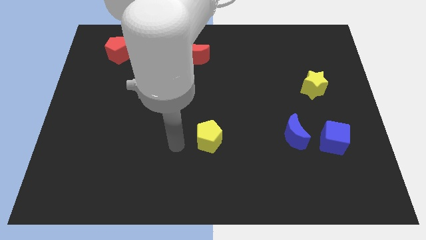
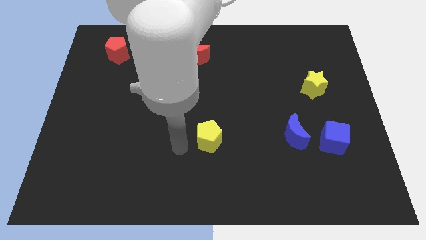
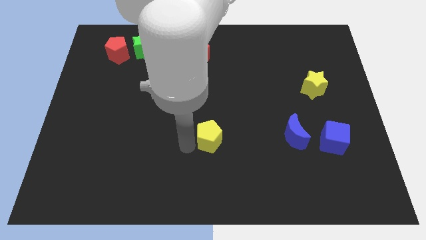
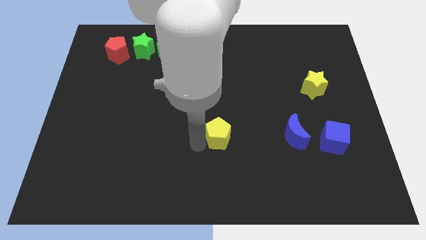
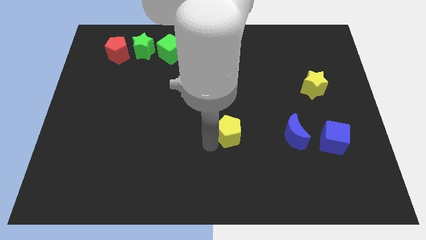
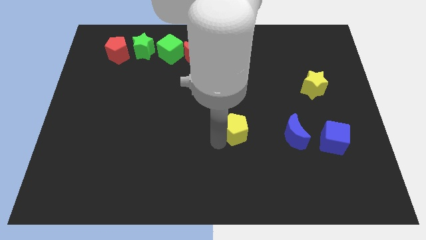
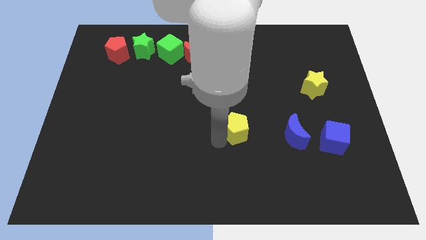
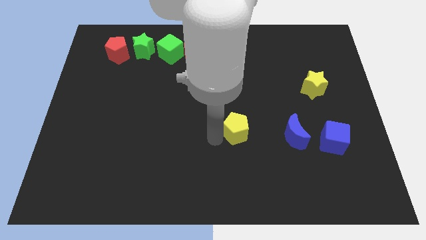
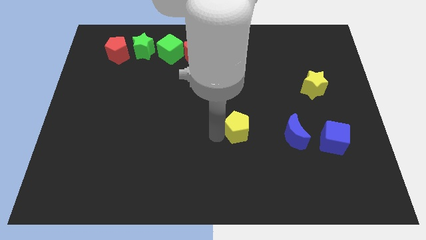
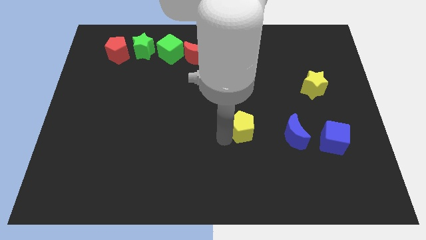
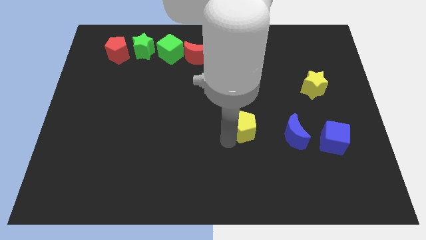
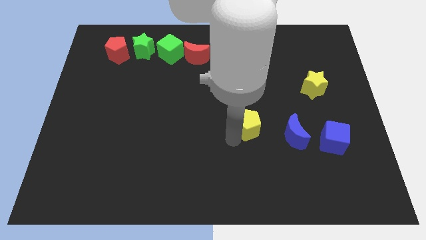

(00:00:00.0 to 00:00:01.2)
push the yellow pentagon towards the blue moon

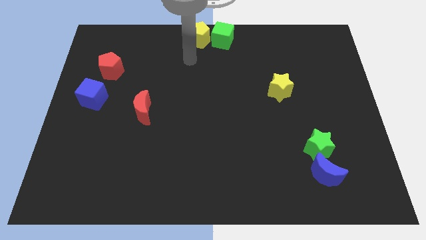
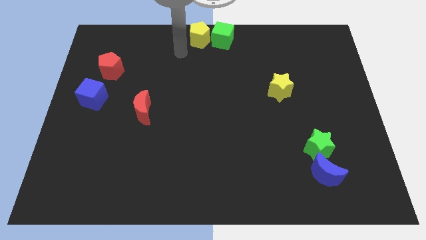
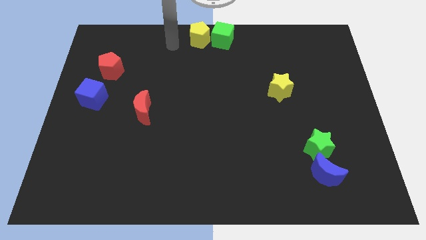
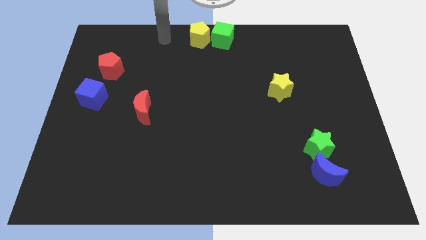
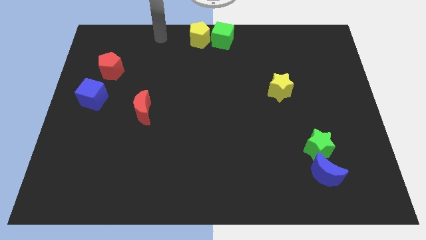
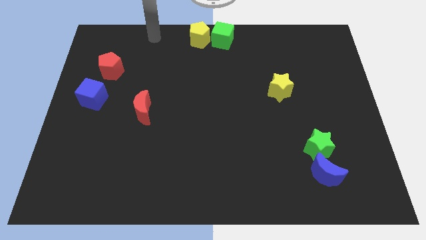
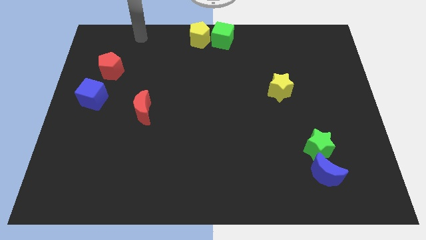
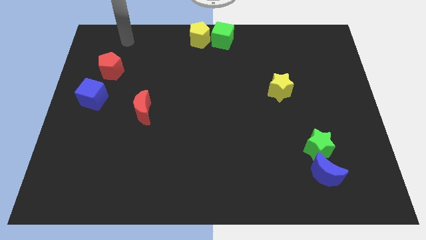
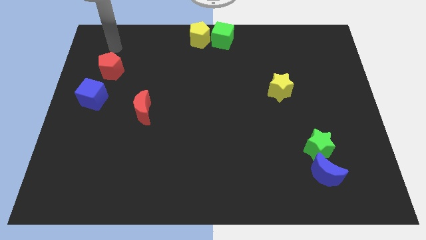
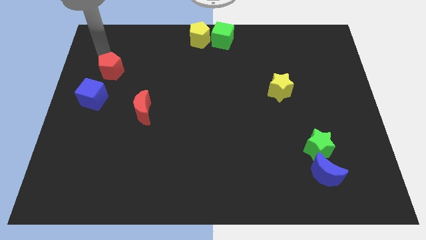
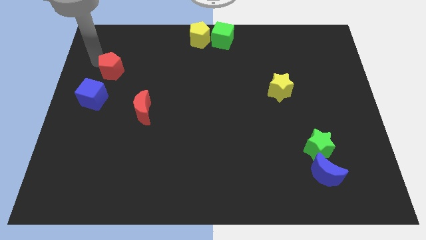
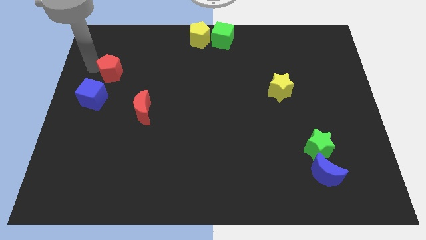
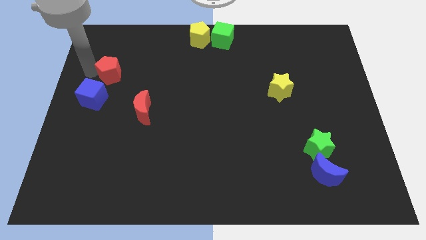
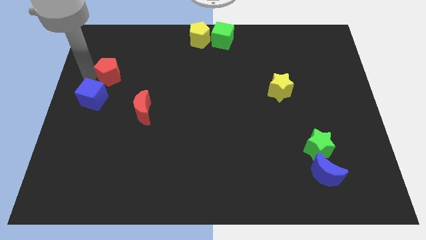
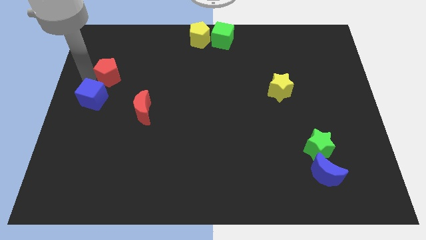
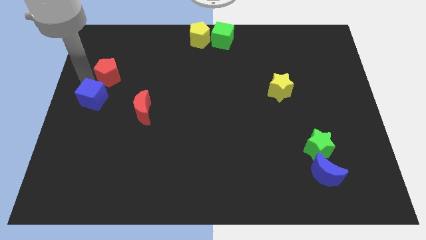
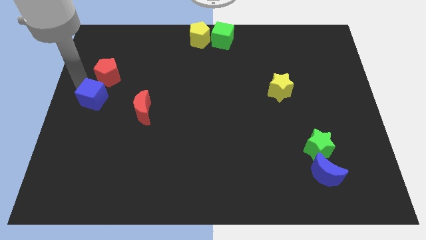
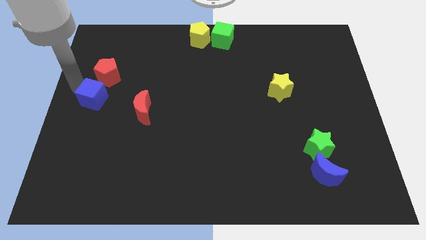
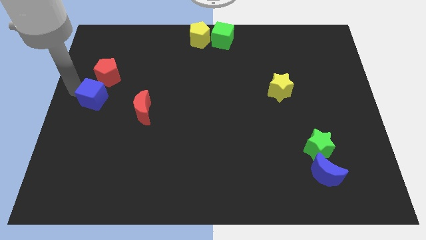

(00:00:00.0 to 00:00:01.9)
push the red pentagon close to the blue cube

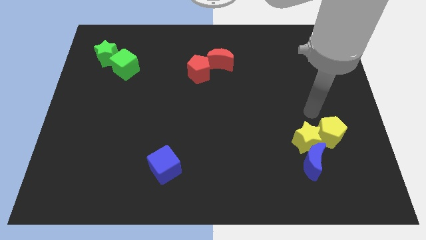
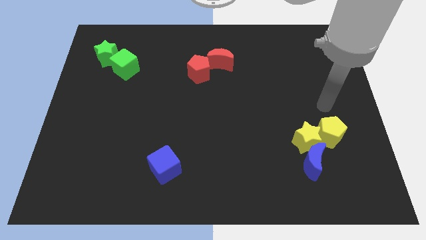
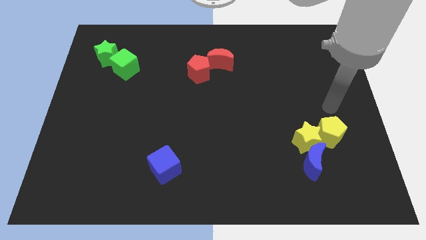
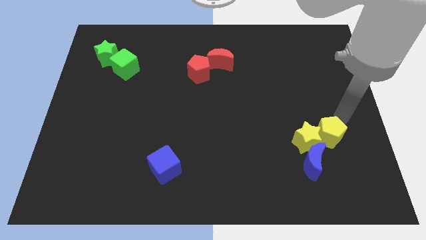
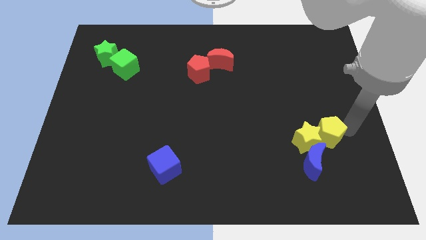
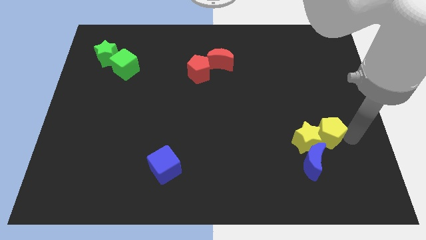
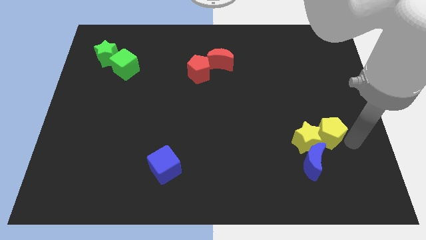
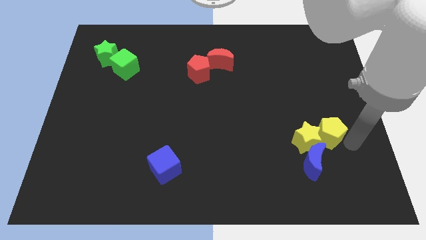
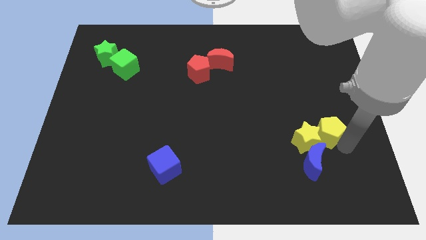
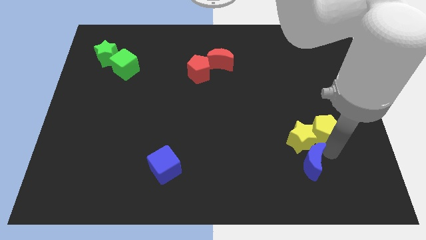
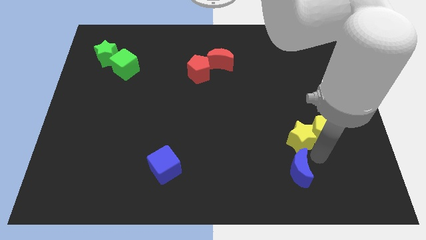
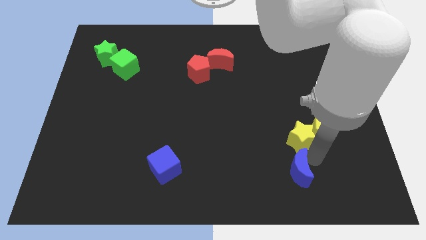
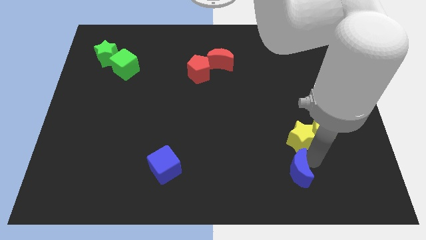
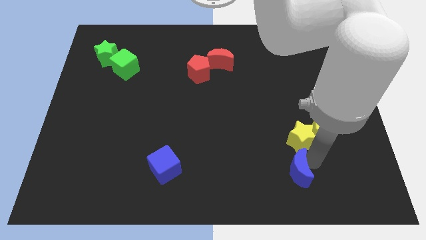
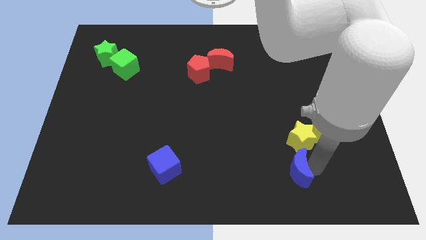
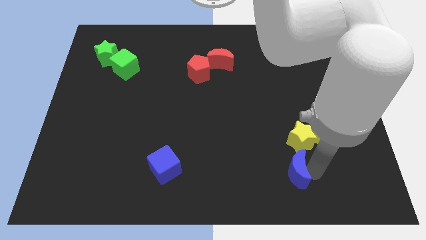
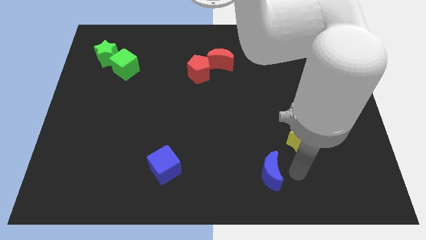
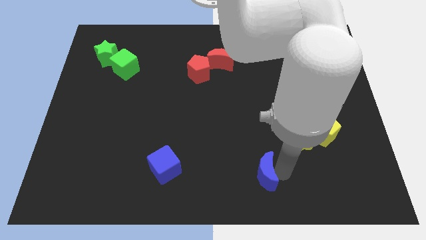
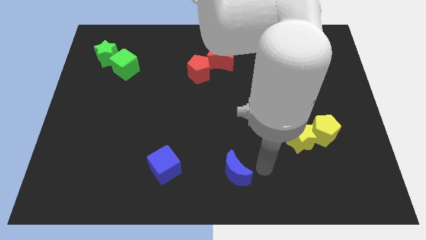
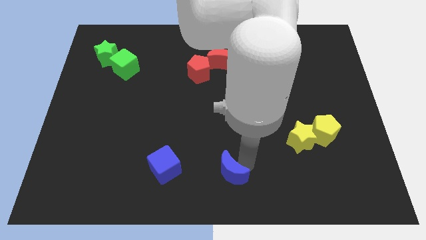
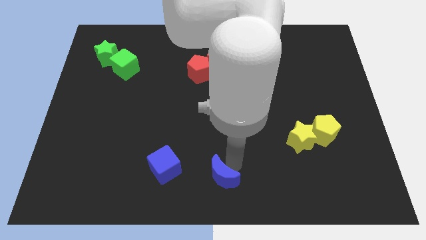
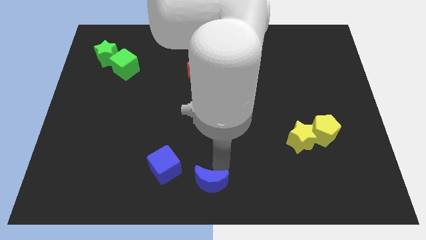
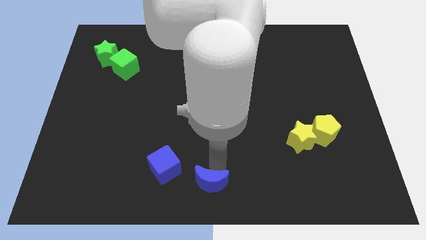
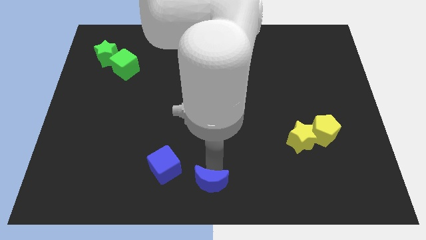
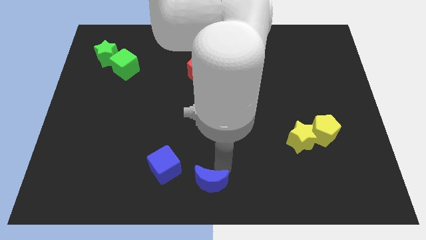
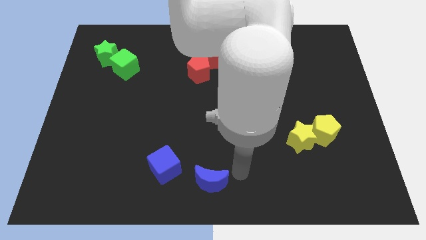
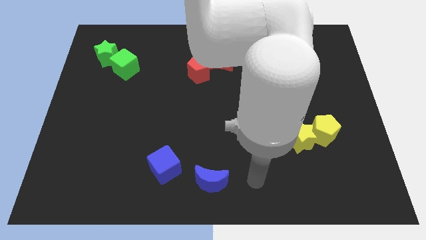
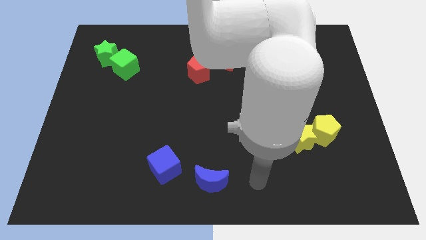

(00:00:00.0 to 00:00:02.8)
separate the blue moon from the yellow star and yellow pentagon

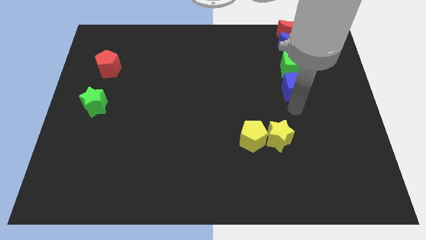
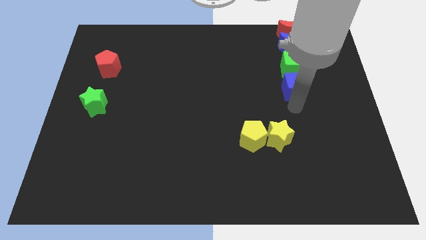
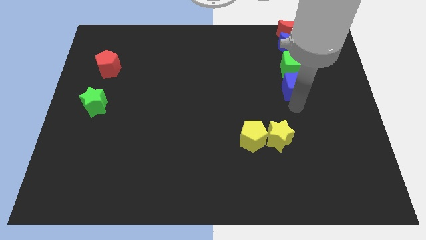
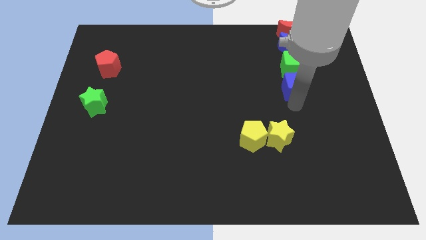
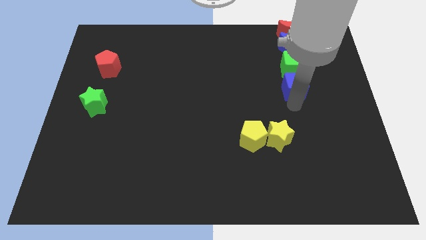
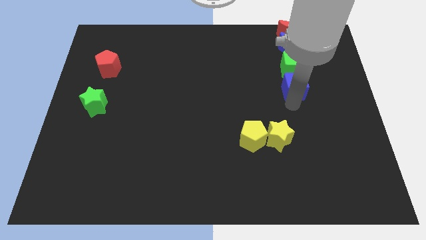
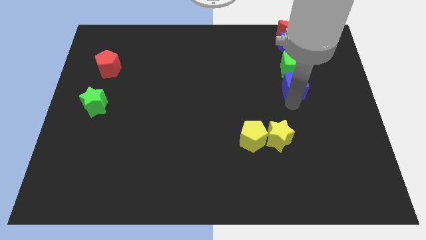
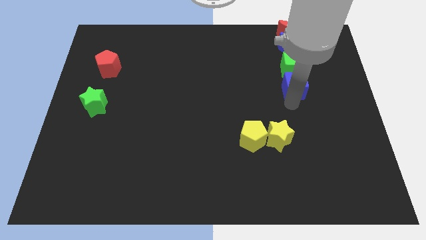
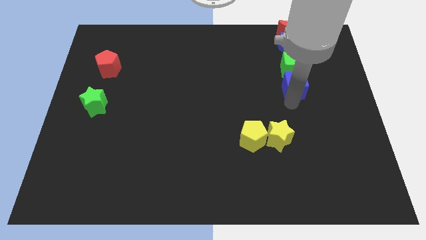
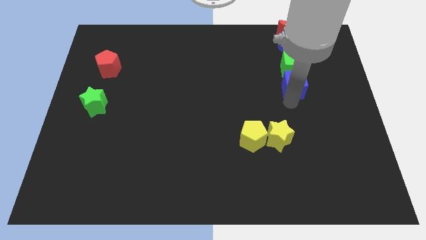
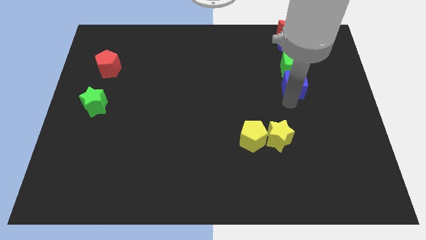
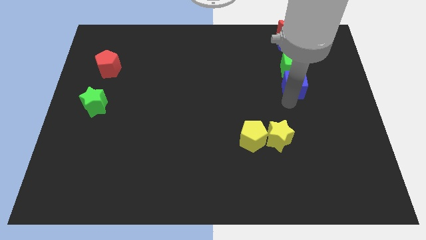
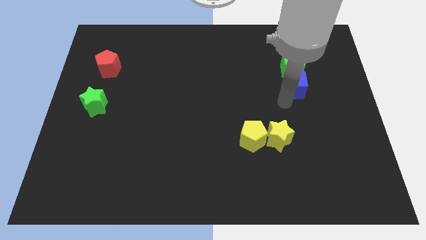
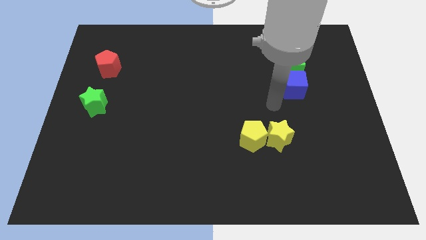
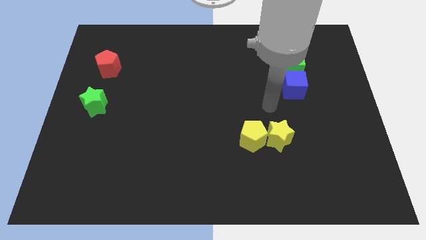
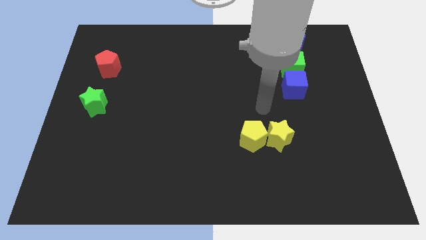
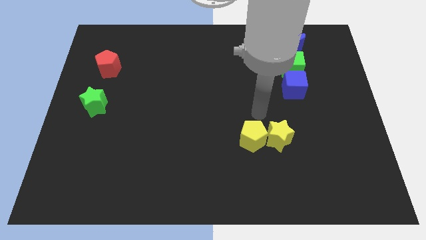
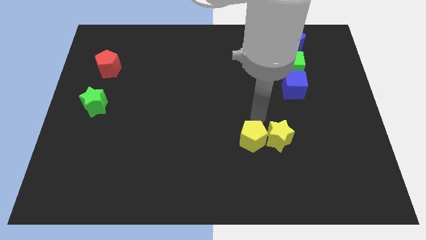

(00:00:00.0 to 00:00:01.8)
move your arm near to the yellow pentagon

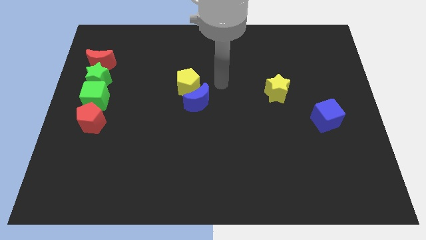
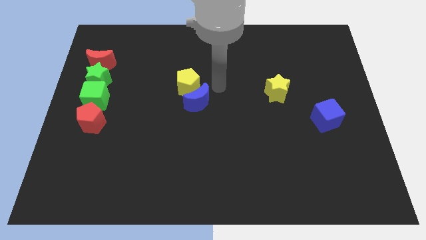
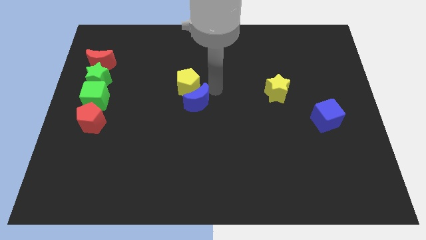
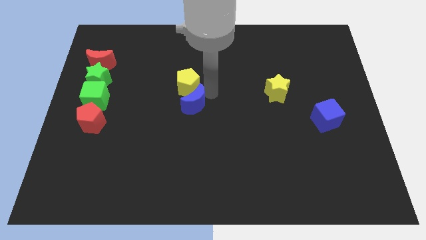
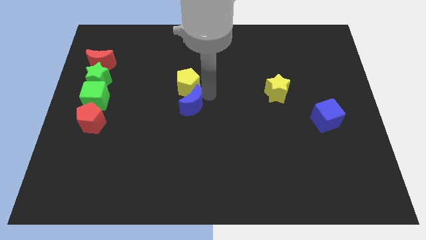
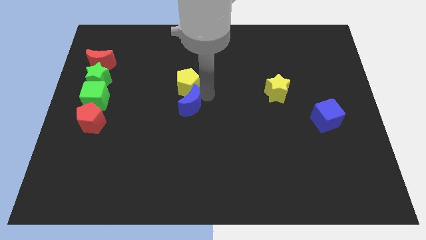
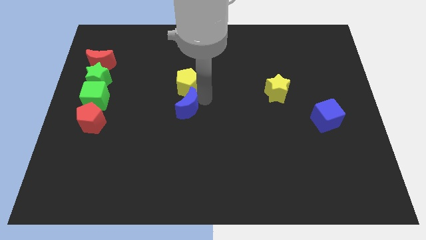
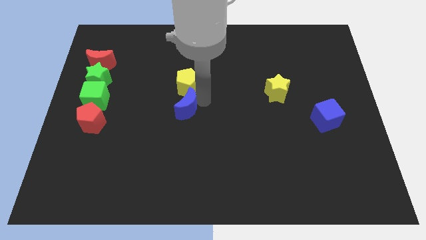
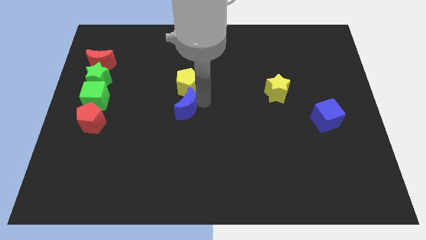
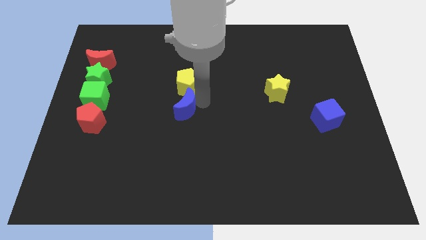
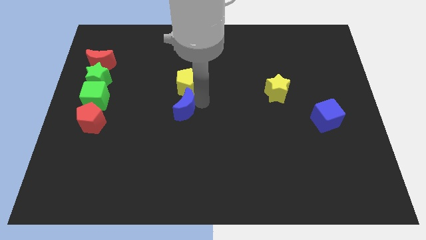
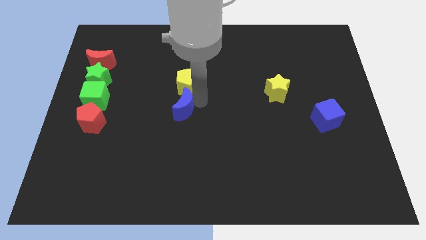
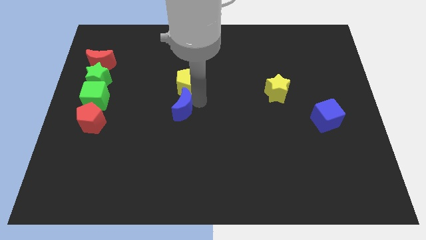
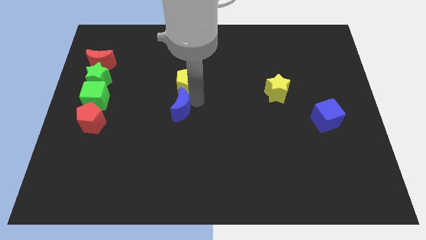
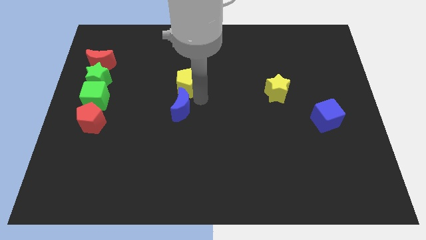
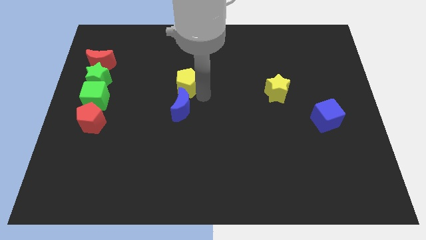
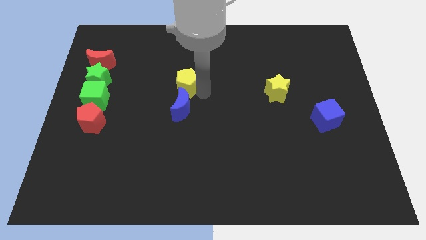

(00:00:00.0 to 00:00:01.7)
move the blue crescent below the yellow pentagon
